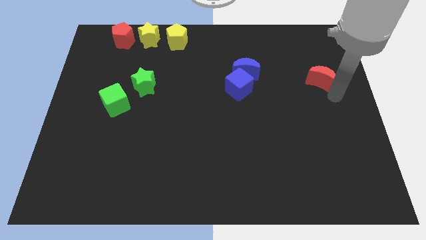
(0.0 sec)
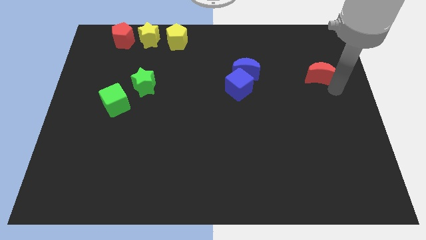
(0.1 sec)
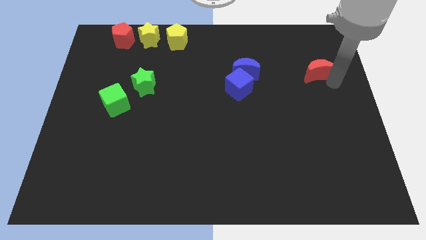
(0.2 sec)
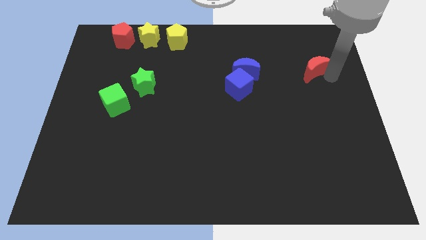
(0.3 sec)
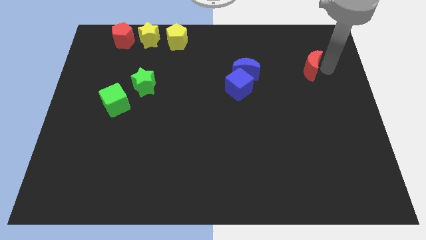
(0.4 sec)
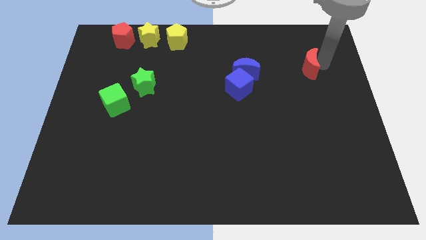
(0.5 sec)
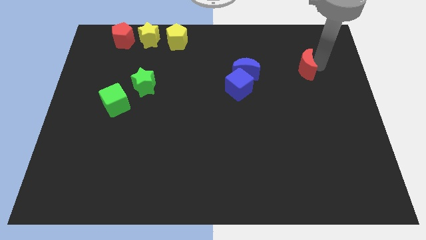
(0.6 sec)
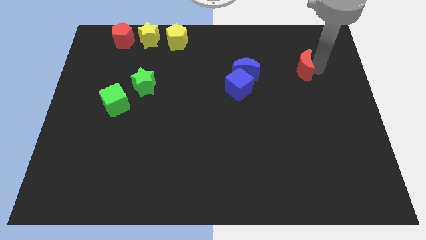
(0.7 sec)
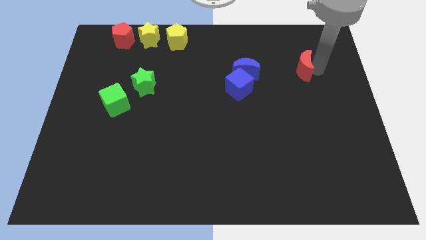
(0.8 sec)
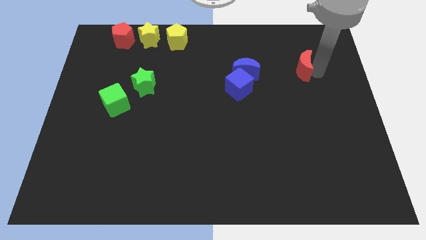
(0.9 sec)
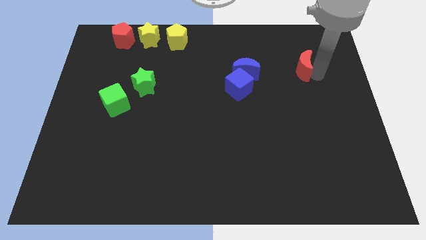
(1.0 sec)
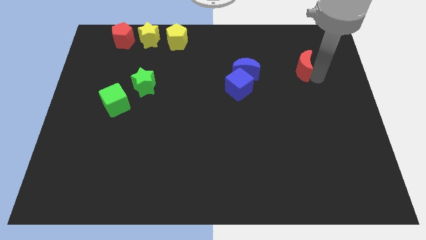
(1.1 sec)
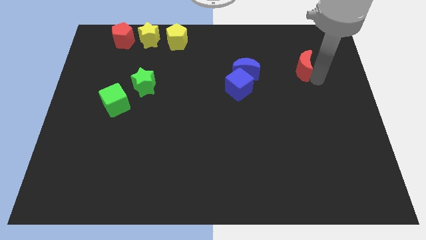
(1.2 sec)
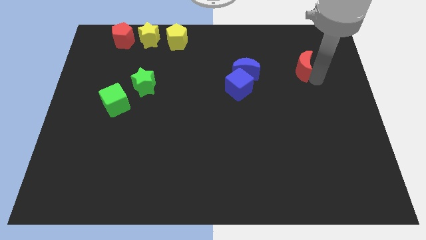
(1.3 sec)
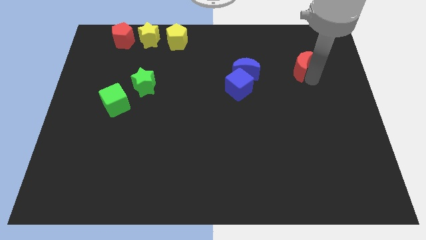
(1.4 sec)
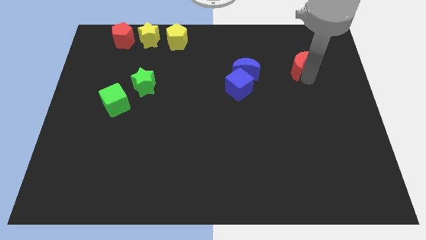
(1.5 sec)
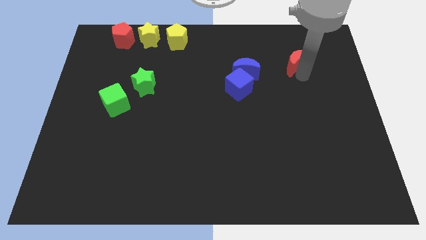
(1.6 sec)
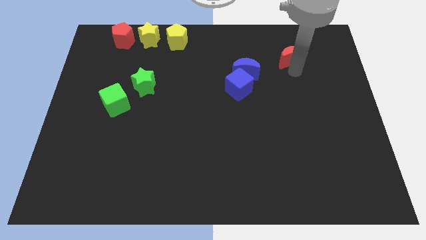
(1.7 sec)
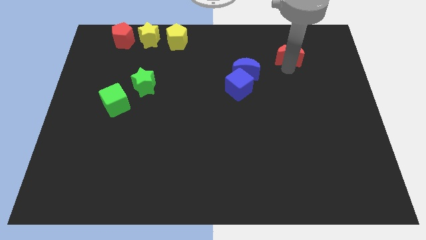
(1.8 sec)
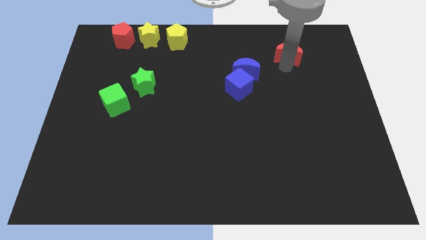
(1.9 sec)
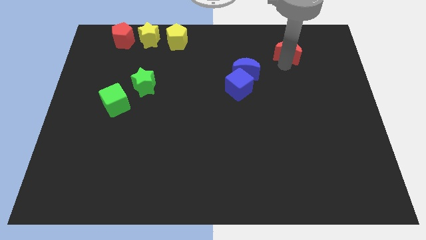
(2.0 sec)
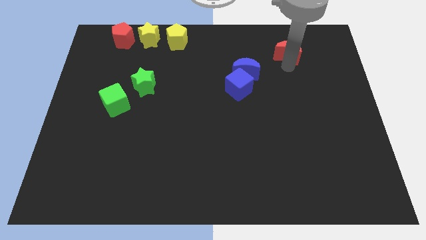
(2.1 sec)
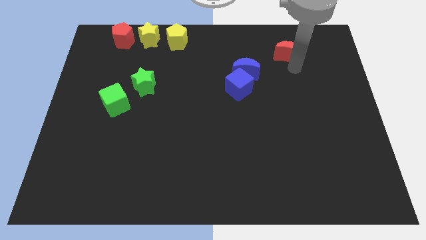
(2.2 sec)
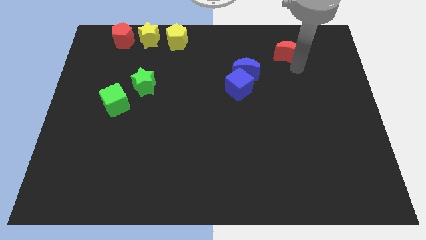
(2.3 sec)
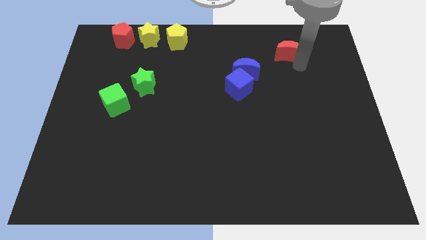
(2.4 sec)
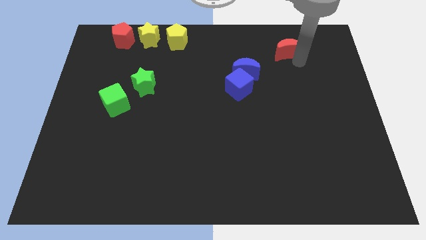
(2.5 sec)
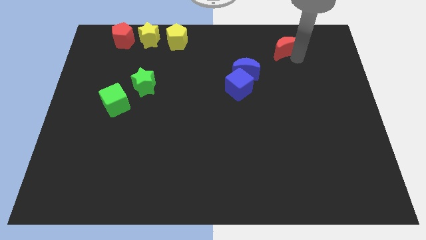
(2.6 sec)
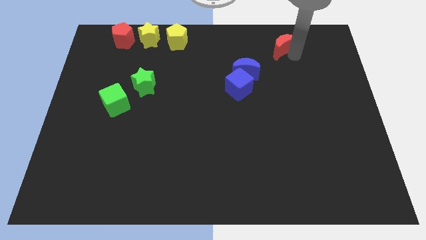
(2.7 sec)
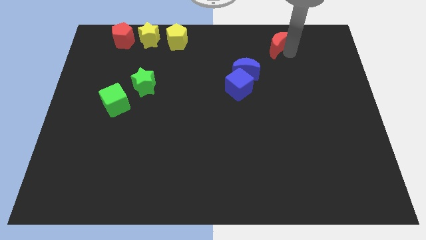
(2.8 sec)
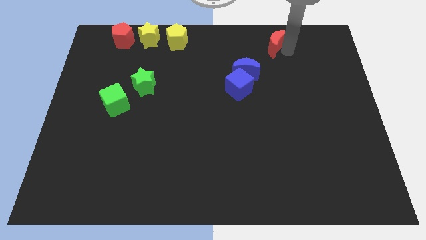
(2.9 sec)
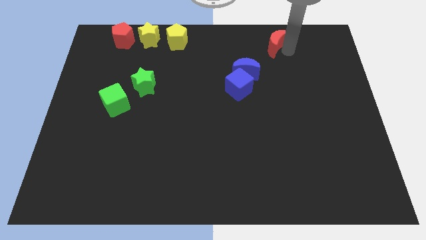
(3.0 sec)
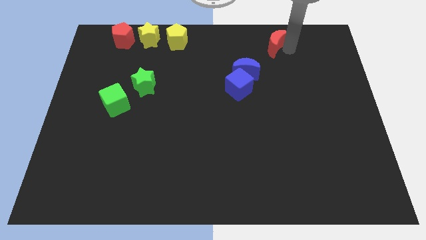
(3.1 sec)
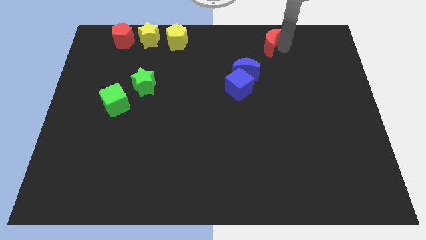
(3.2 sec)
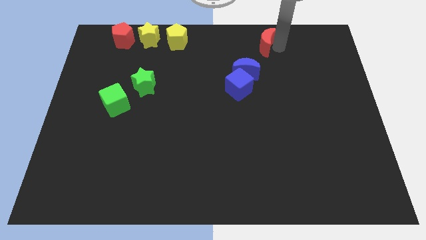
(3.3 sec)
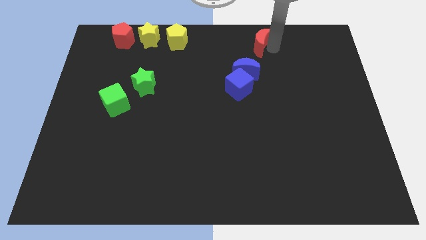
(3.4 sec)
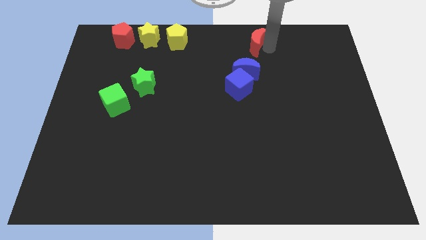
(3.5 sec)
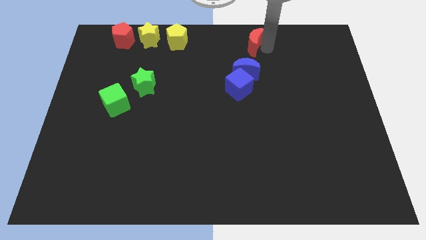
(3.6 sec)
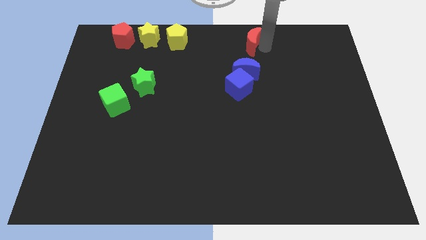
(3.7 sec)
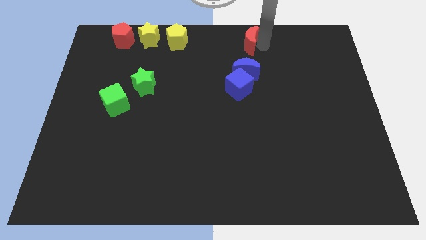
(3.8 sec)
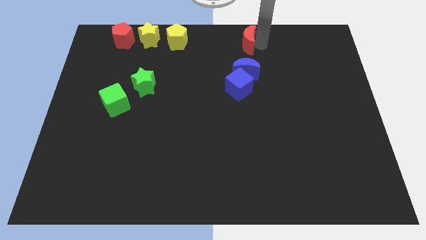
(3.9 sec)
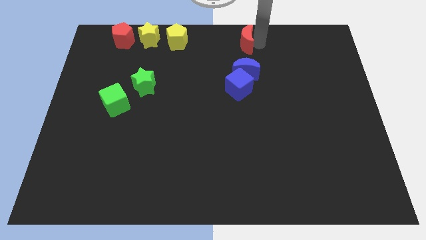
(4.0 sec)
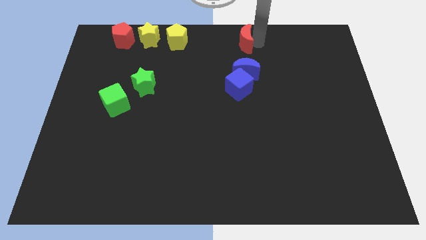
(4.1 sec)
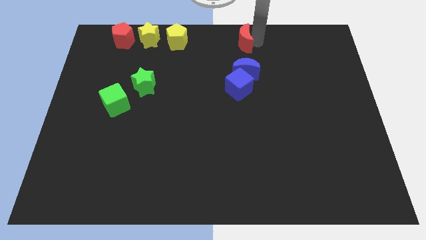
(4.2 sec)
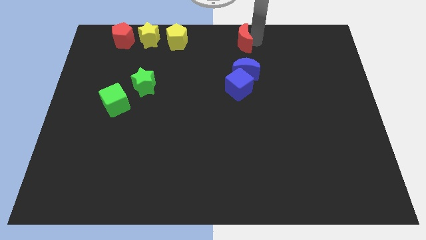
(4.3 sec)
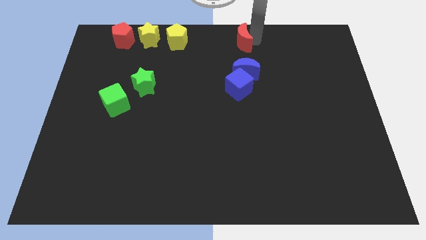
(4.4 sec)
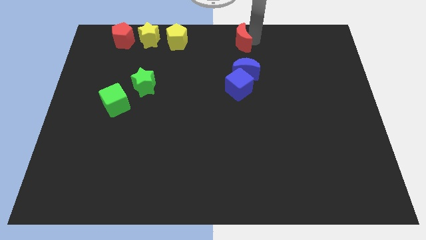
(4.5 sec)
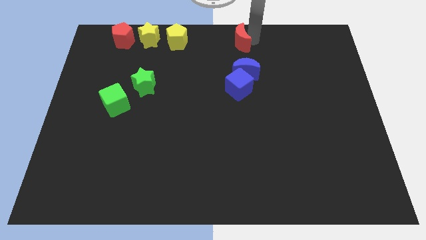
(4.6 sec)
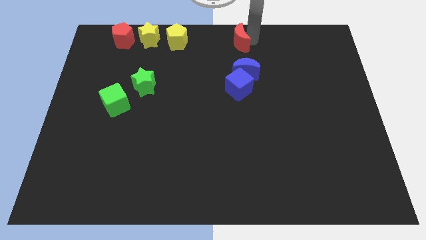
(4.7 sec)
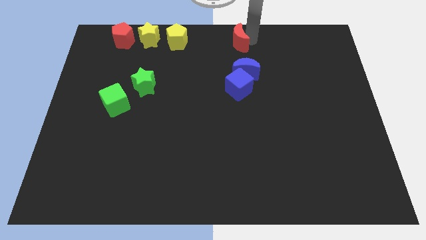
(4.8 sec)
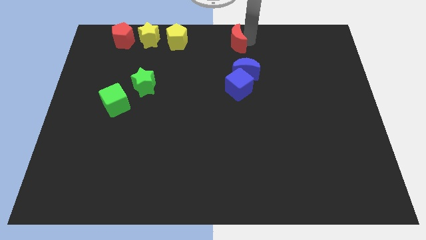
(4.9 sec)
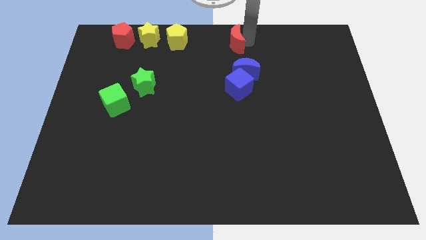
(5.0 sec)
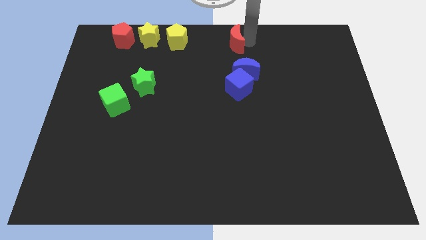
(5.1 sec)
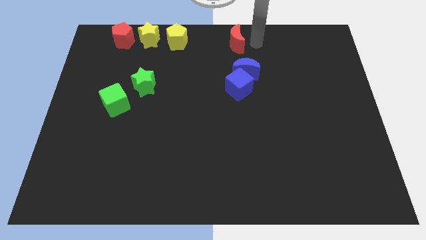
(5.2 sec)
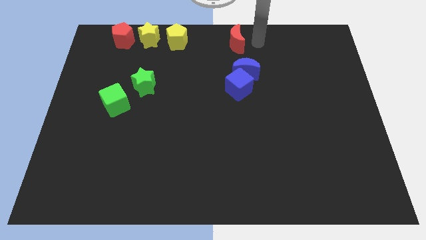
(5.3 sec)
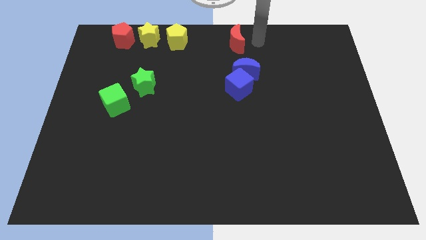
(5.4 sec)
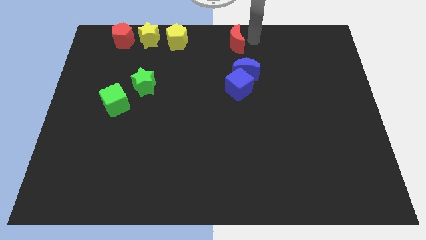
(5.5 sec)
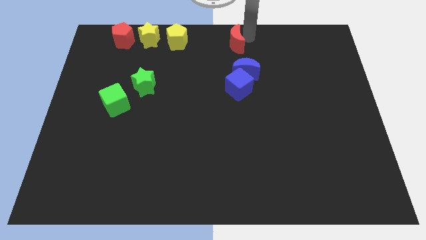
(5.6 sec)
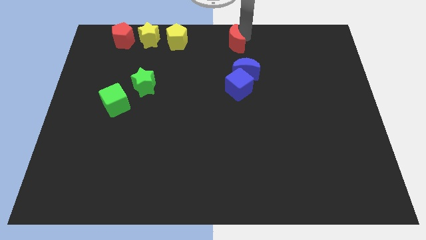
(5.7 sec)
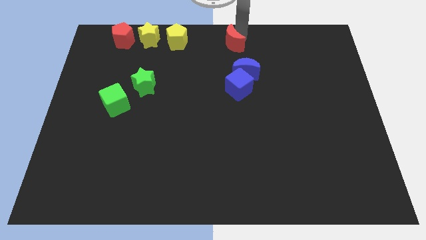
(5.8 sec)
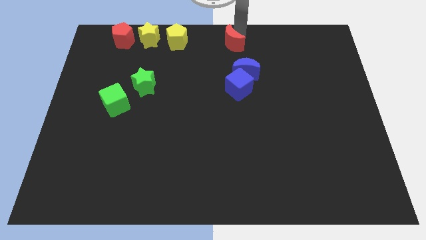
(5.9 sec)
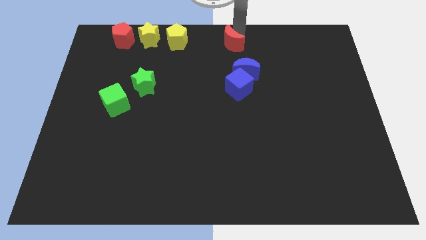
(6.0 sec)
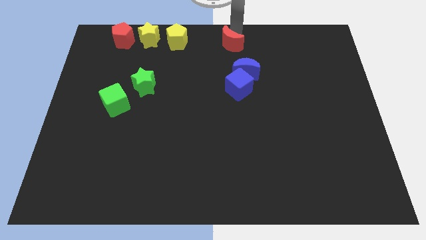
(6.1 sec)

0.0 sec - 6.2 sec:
place the red moon right to the yellow pentagon

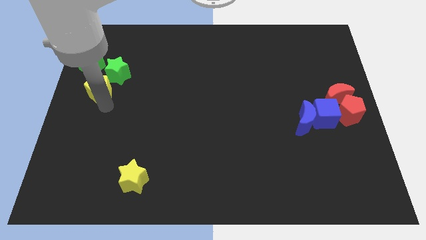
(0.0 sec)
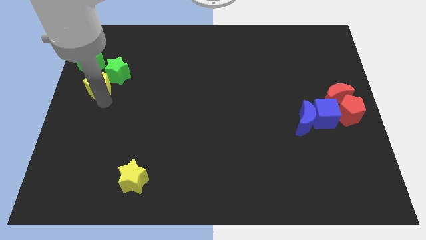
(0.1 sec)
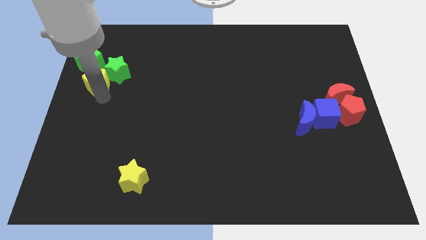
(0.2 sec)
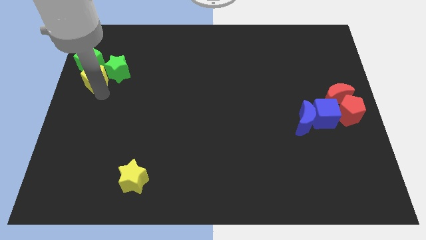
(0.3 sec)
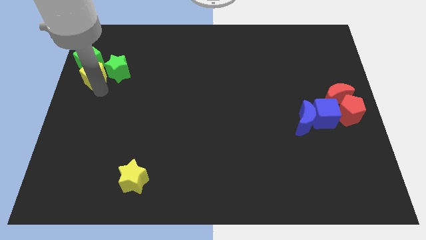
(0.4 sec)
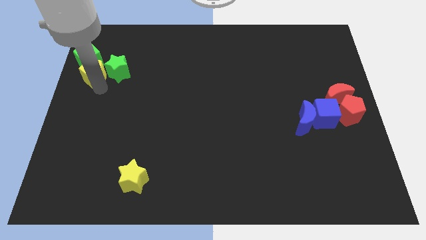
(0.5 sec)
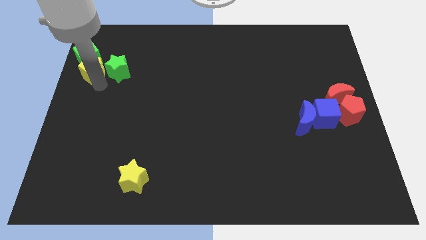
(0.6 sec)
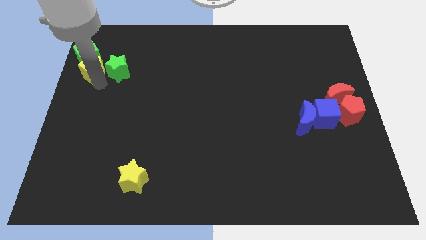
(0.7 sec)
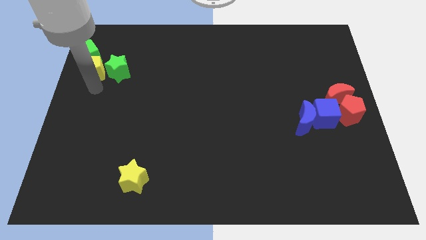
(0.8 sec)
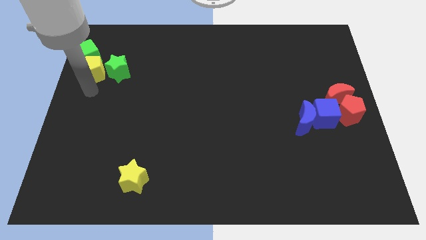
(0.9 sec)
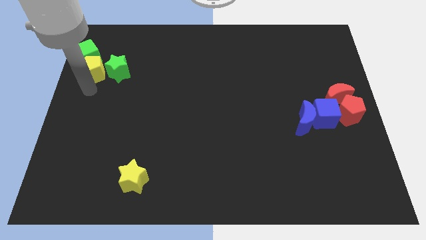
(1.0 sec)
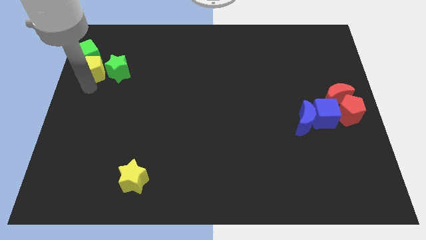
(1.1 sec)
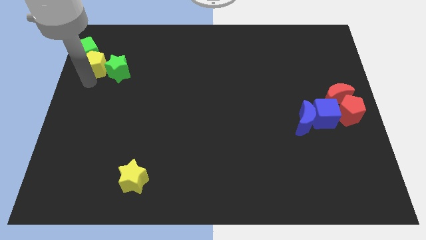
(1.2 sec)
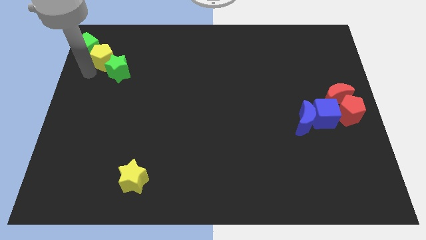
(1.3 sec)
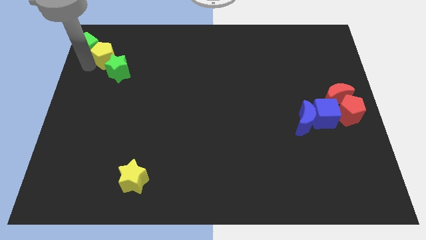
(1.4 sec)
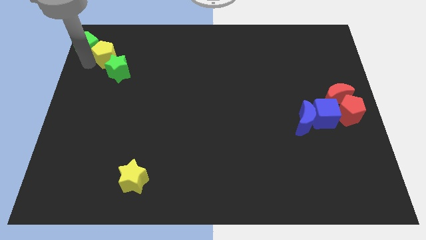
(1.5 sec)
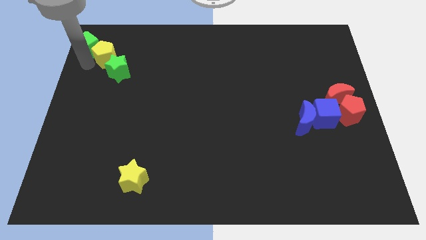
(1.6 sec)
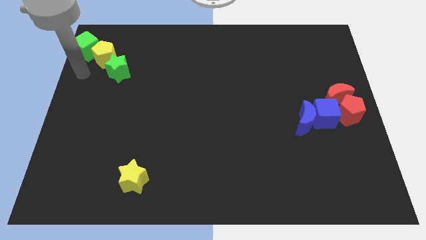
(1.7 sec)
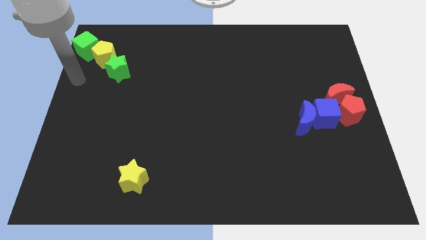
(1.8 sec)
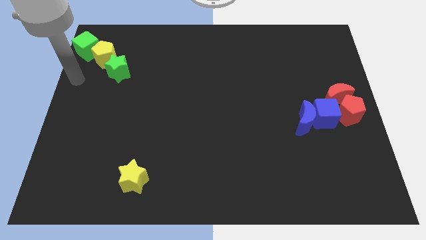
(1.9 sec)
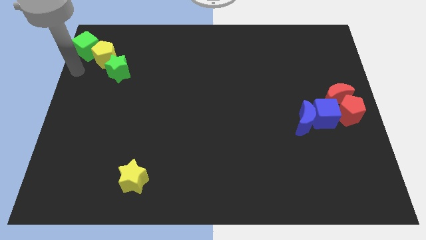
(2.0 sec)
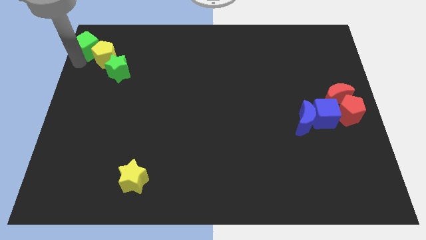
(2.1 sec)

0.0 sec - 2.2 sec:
place the yellow pentagon in between the green star and the green cube

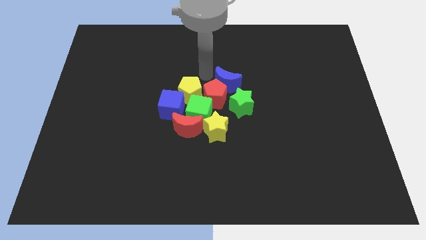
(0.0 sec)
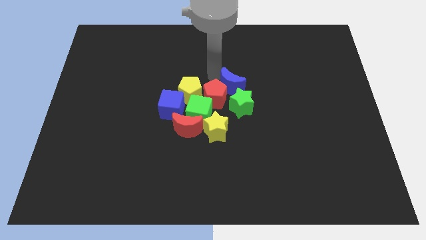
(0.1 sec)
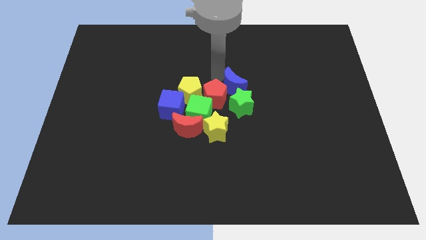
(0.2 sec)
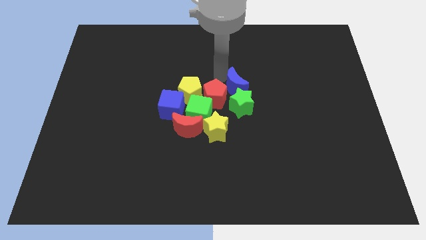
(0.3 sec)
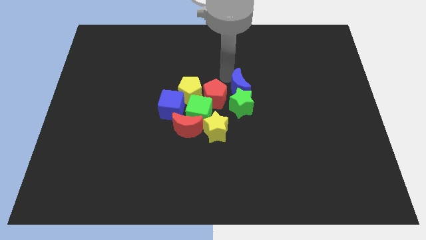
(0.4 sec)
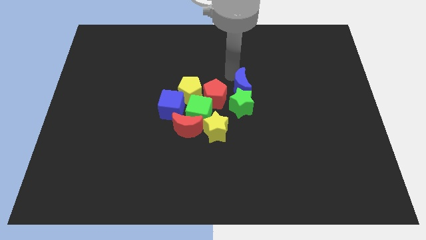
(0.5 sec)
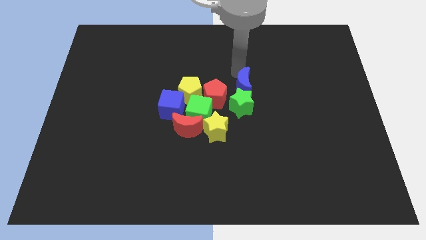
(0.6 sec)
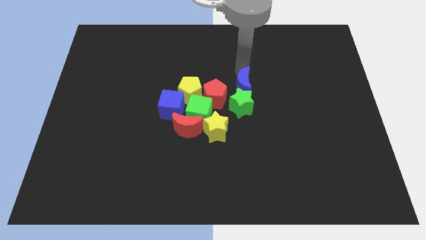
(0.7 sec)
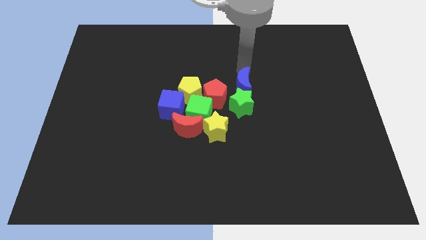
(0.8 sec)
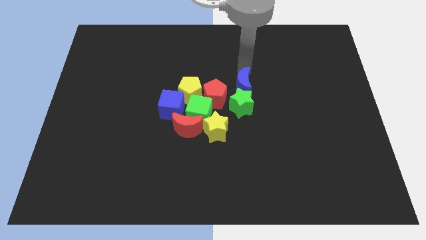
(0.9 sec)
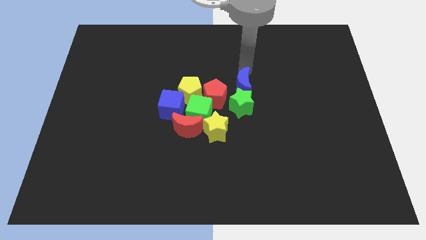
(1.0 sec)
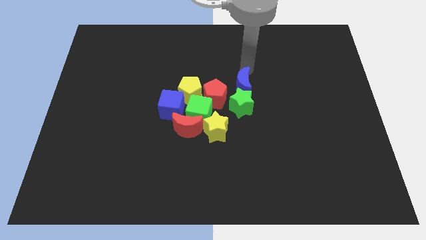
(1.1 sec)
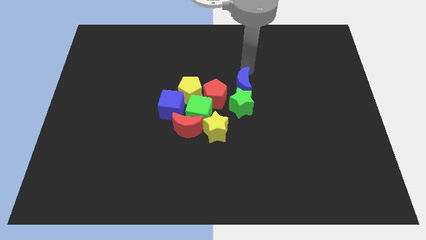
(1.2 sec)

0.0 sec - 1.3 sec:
move blue crescent to the top of green star
